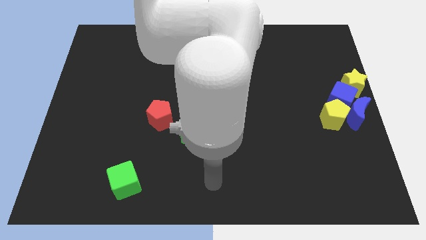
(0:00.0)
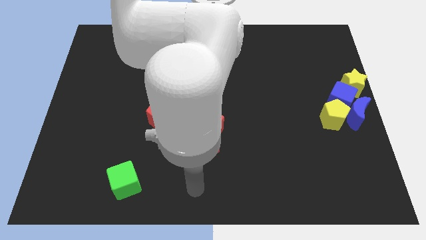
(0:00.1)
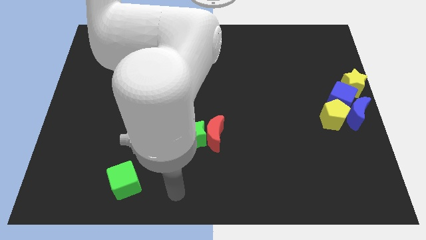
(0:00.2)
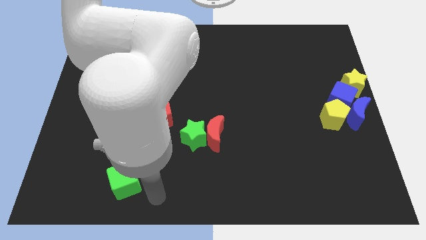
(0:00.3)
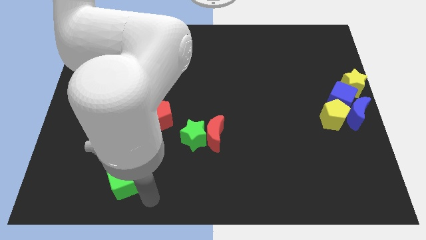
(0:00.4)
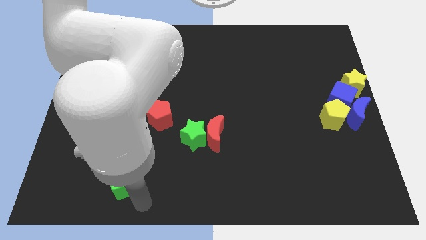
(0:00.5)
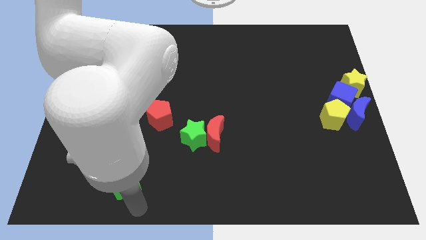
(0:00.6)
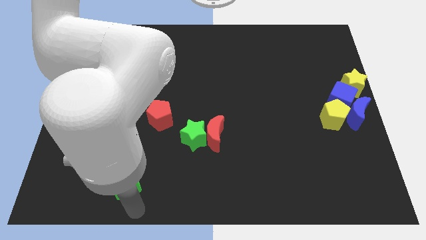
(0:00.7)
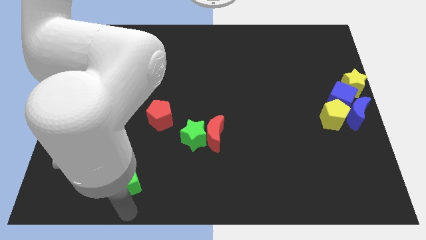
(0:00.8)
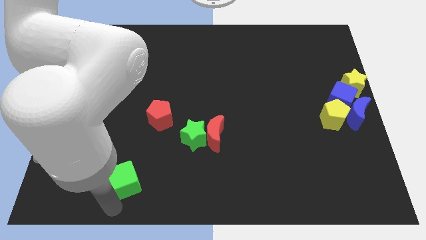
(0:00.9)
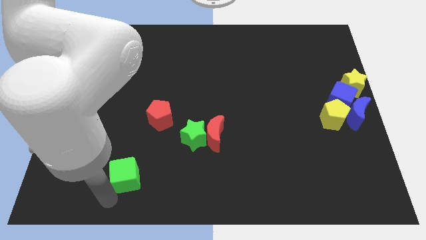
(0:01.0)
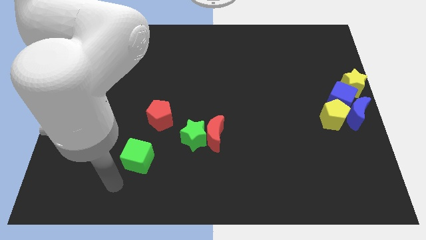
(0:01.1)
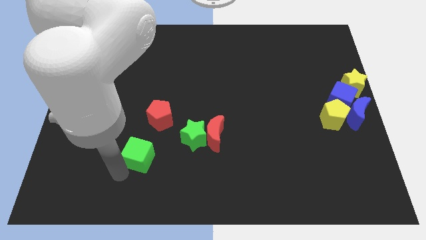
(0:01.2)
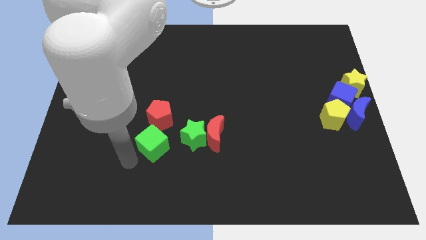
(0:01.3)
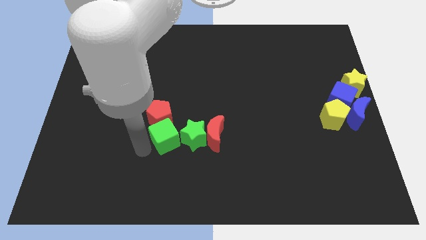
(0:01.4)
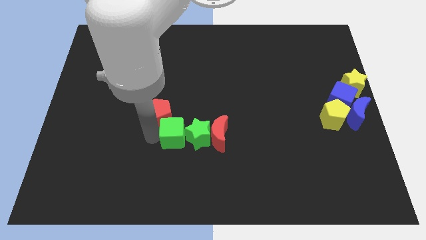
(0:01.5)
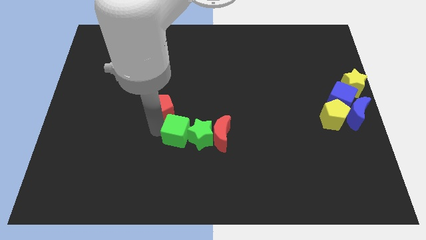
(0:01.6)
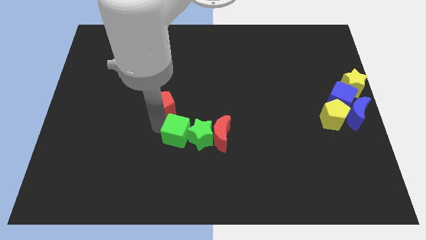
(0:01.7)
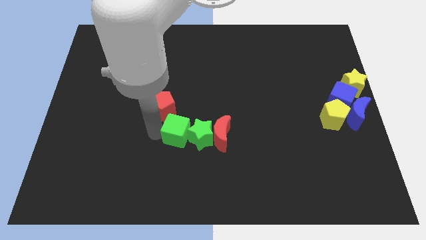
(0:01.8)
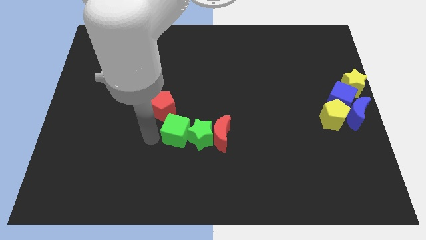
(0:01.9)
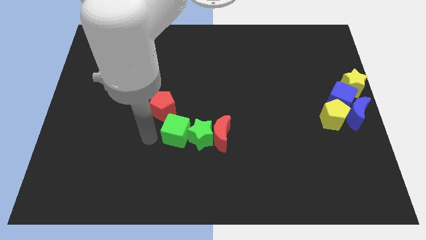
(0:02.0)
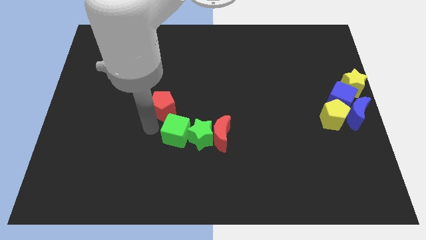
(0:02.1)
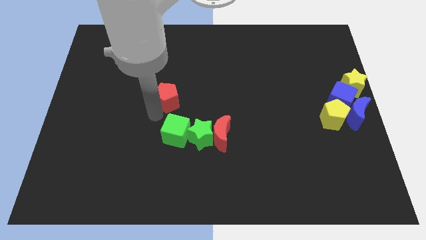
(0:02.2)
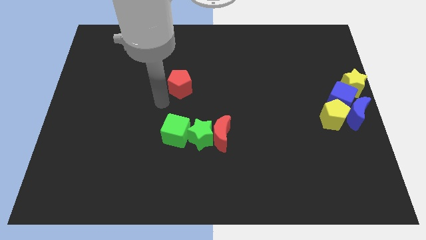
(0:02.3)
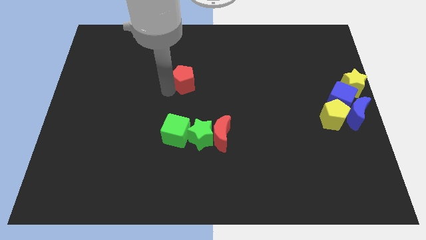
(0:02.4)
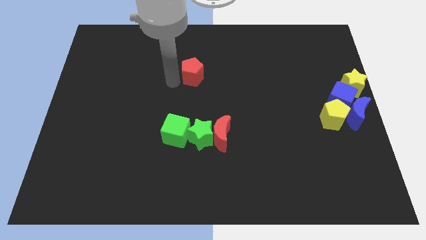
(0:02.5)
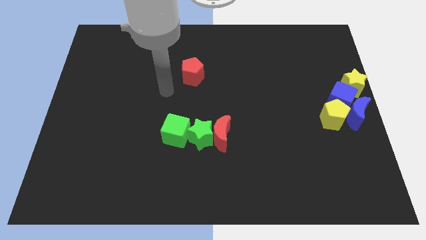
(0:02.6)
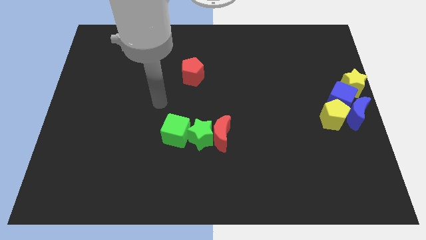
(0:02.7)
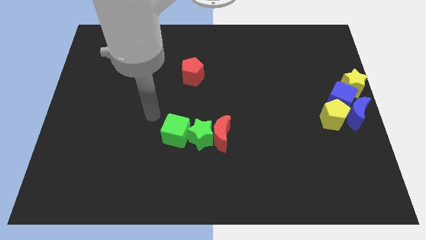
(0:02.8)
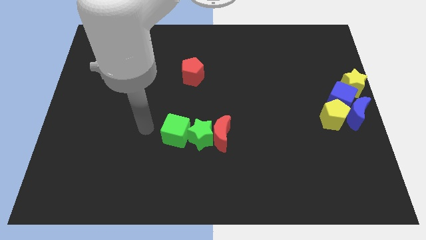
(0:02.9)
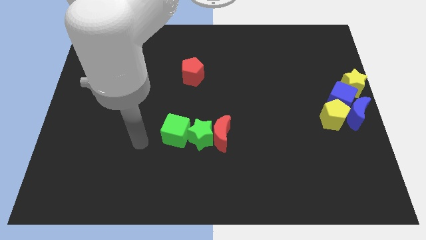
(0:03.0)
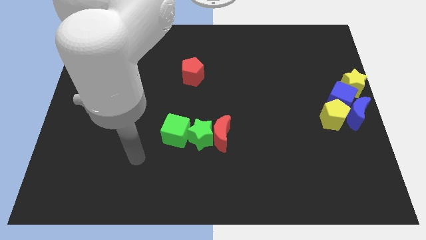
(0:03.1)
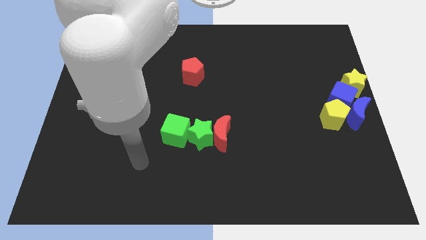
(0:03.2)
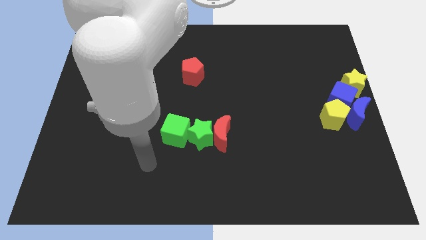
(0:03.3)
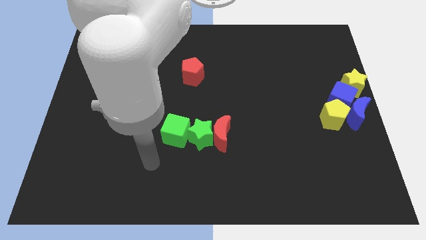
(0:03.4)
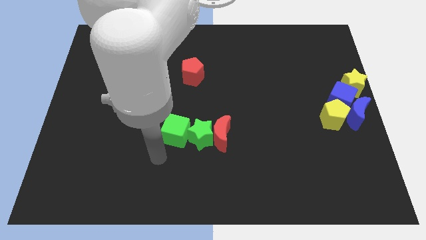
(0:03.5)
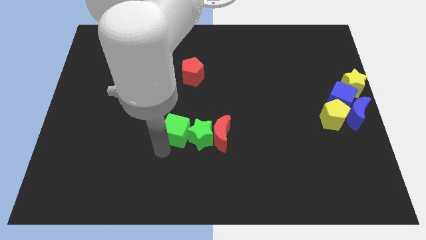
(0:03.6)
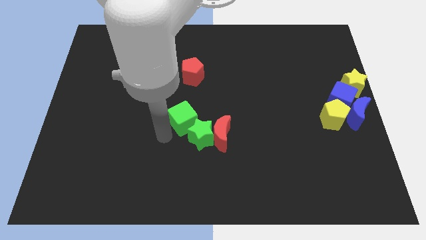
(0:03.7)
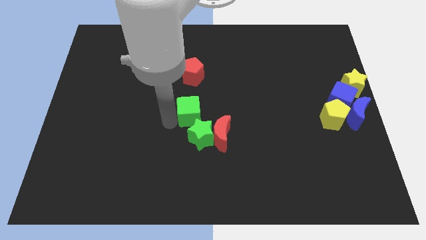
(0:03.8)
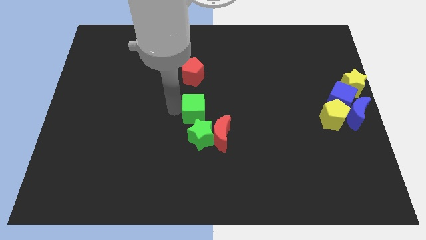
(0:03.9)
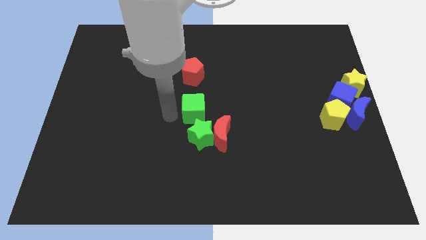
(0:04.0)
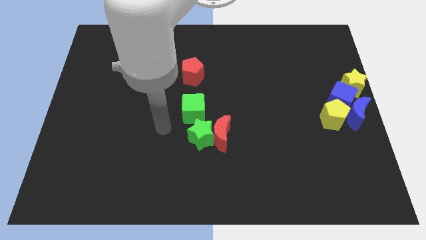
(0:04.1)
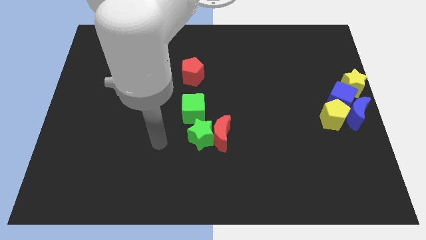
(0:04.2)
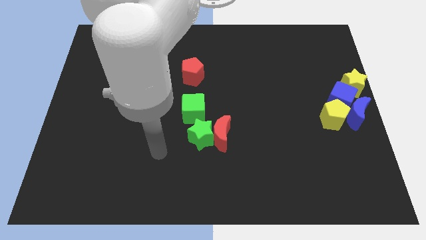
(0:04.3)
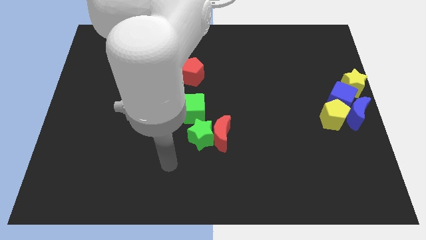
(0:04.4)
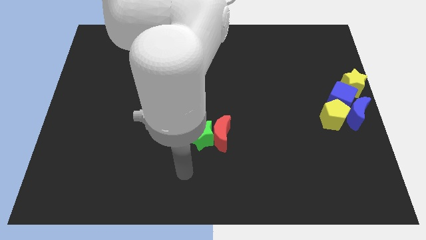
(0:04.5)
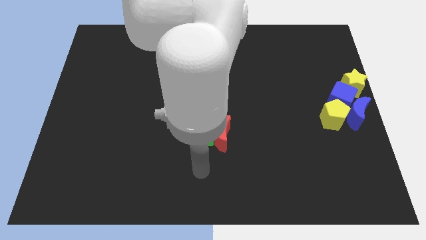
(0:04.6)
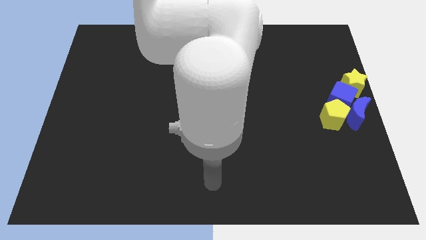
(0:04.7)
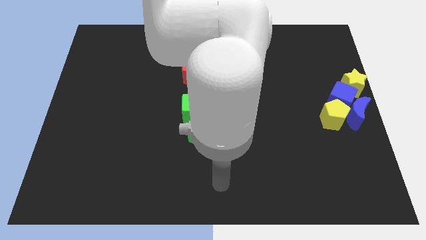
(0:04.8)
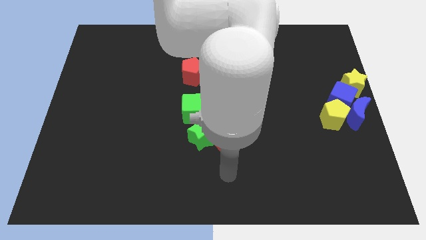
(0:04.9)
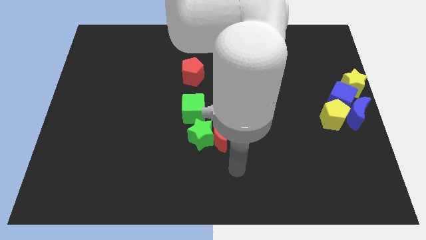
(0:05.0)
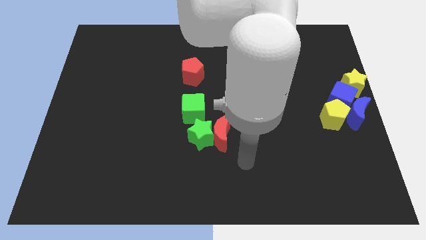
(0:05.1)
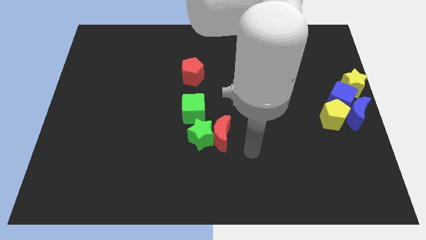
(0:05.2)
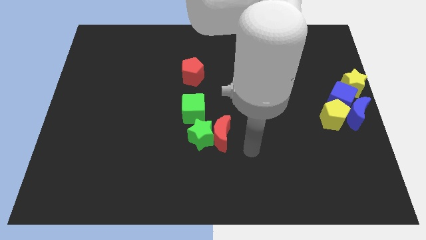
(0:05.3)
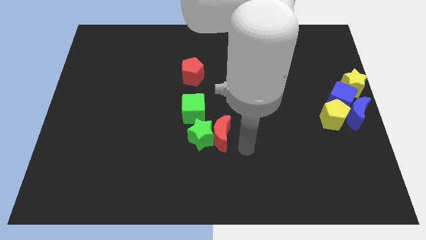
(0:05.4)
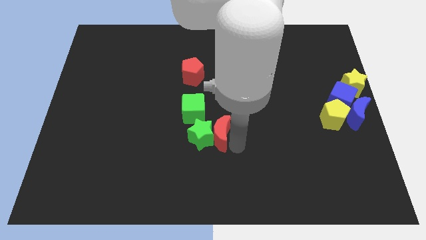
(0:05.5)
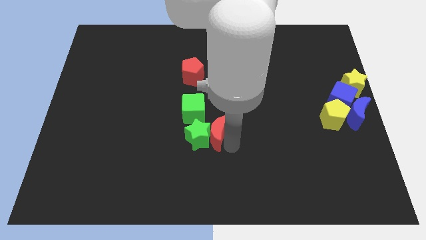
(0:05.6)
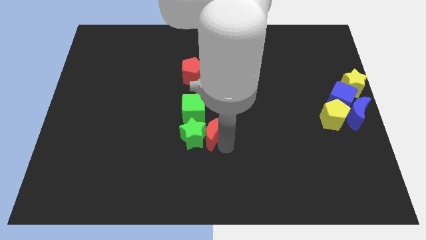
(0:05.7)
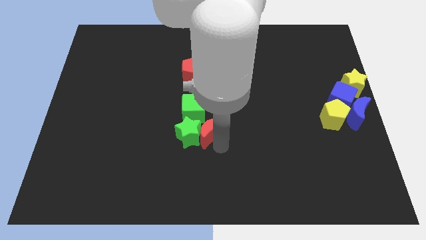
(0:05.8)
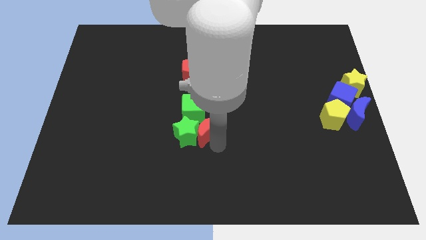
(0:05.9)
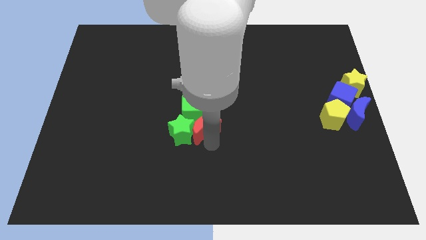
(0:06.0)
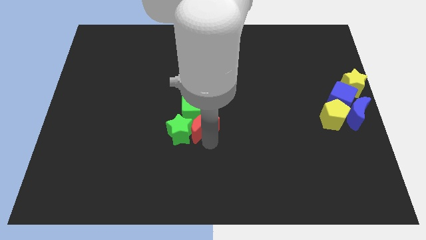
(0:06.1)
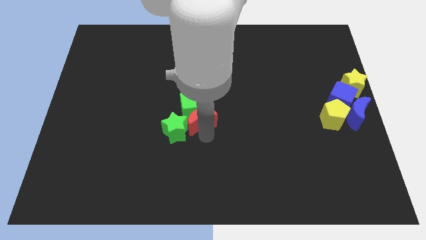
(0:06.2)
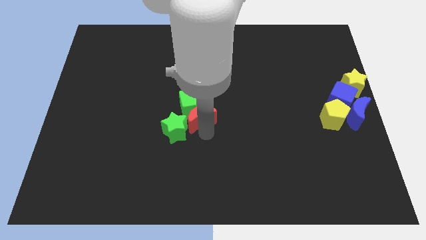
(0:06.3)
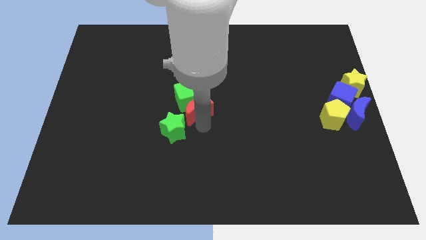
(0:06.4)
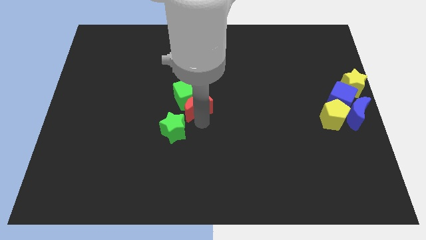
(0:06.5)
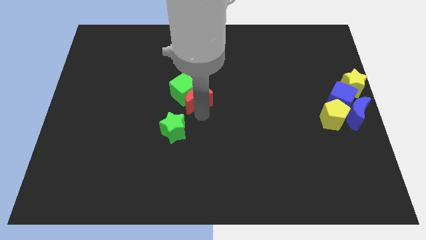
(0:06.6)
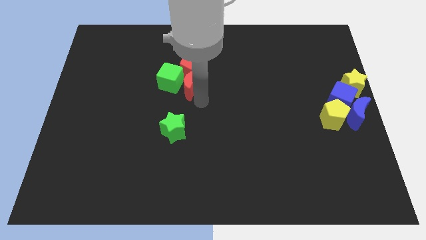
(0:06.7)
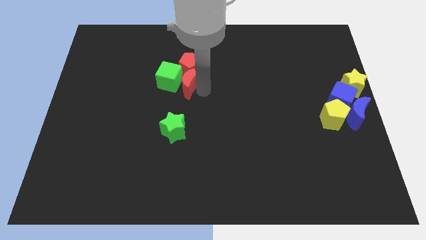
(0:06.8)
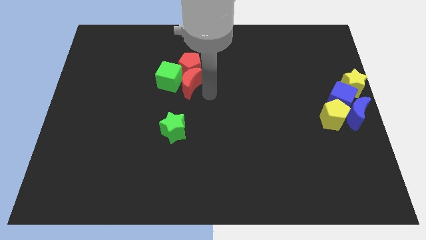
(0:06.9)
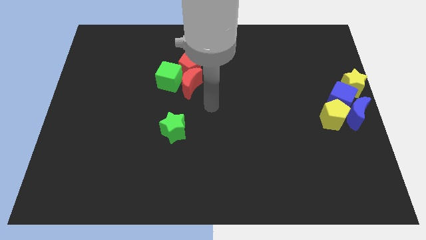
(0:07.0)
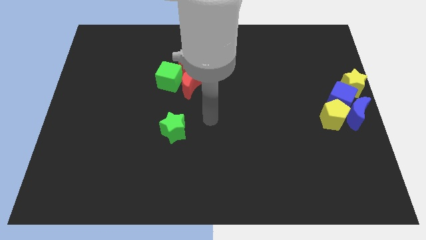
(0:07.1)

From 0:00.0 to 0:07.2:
place red moon green star and red pentagon together

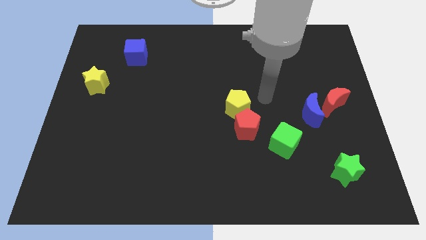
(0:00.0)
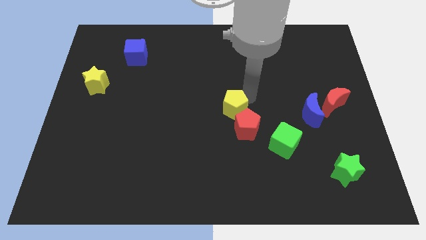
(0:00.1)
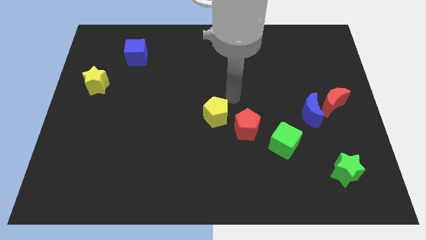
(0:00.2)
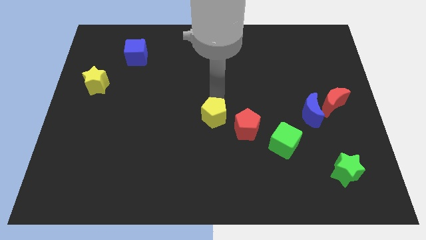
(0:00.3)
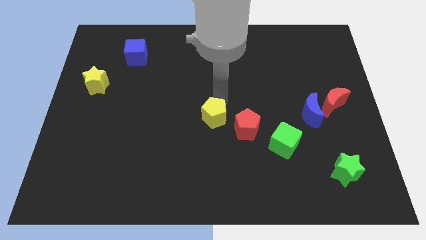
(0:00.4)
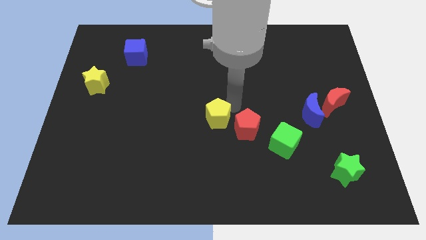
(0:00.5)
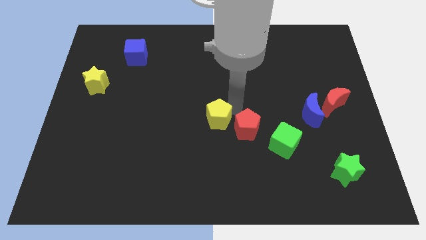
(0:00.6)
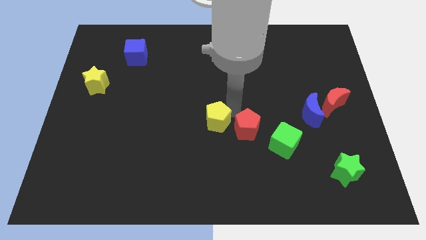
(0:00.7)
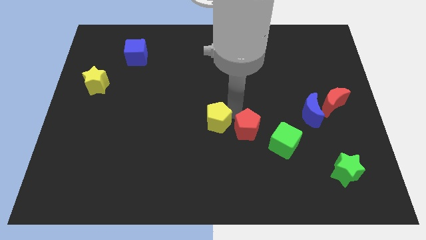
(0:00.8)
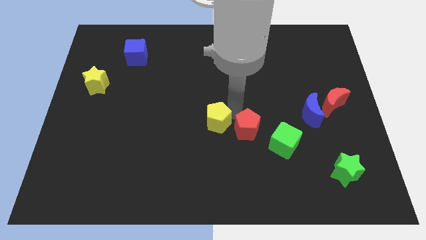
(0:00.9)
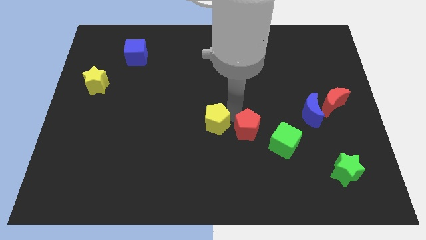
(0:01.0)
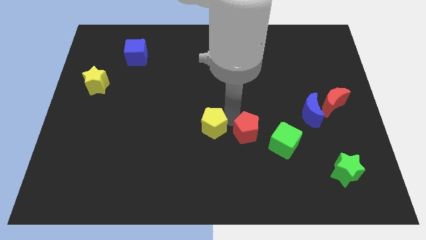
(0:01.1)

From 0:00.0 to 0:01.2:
place yellow pentagon left to red pentagon

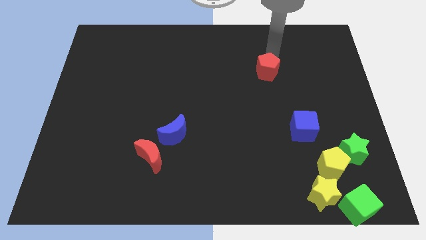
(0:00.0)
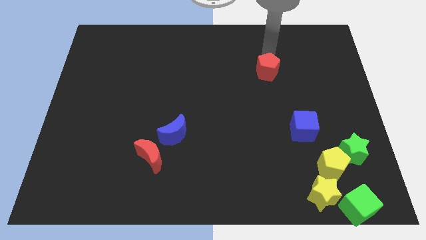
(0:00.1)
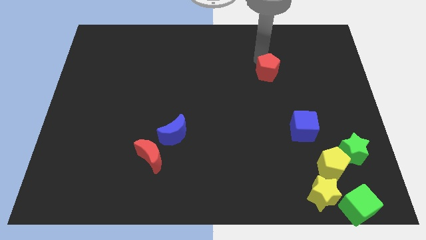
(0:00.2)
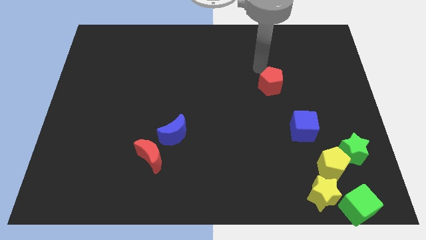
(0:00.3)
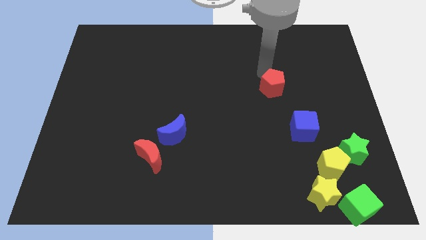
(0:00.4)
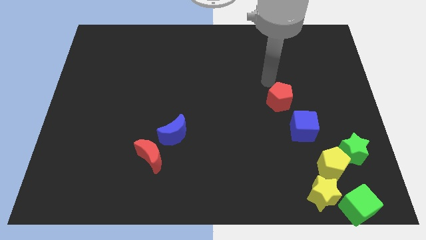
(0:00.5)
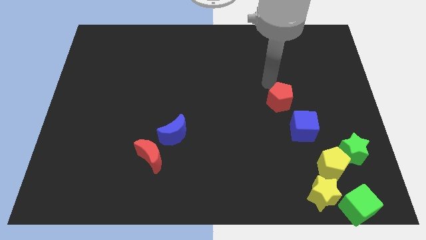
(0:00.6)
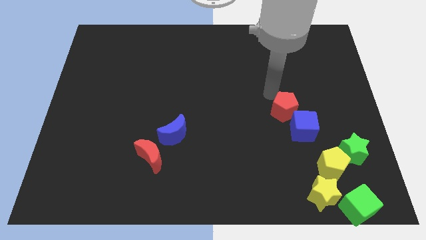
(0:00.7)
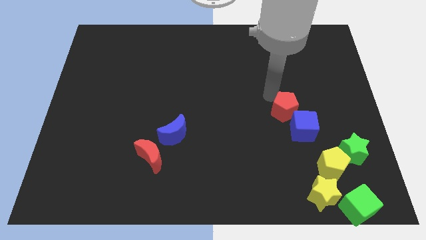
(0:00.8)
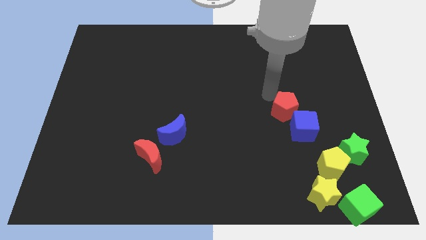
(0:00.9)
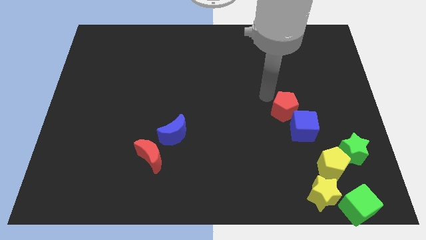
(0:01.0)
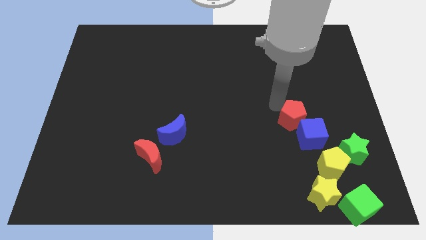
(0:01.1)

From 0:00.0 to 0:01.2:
push the red pentagon into the blue cube
